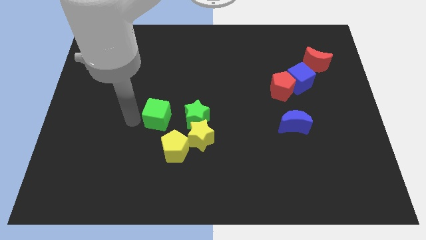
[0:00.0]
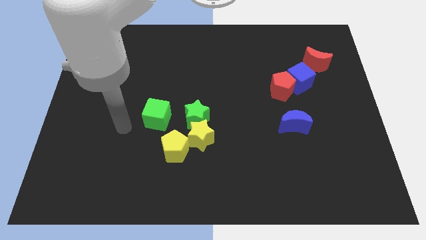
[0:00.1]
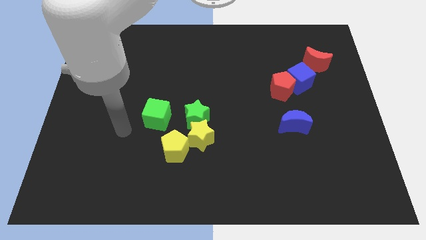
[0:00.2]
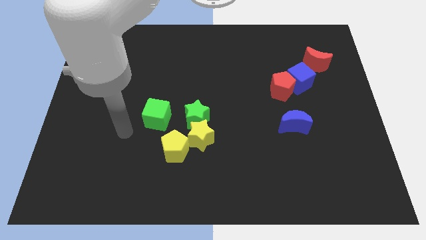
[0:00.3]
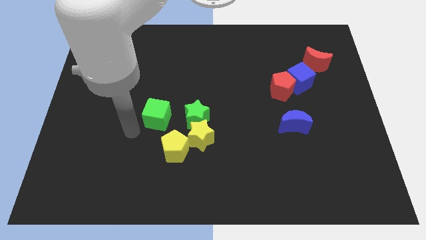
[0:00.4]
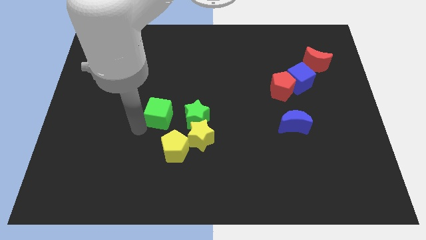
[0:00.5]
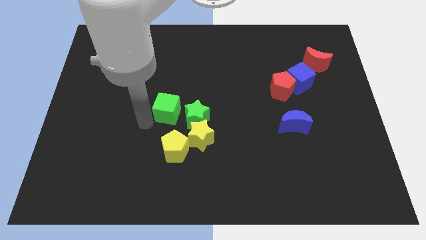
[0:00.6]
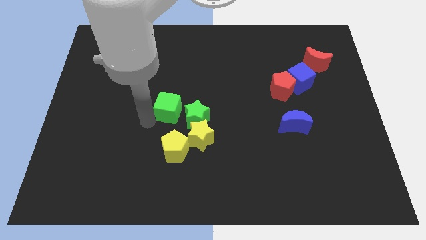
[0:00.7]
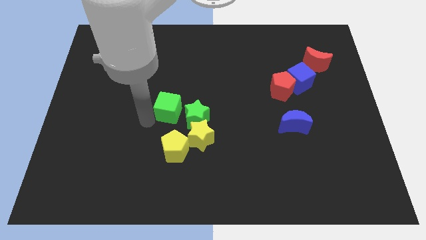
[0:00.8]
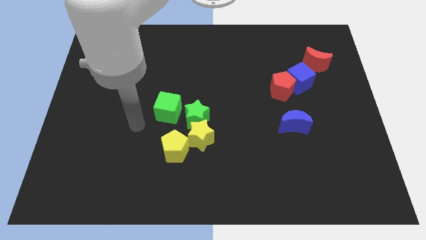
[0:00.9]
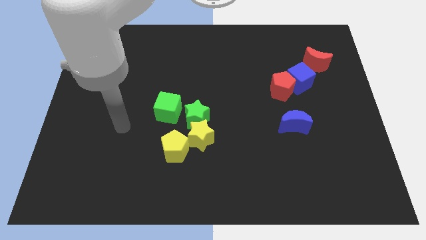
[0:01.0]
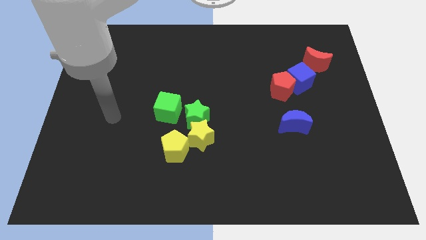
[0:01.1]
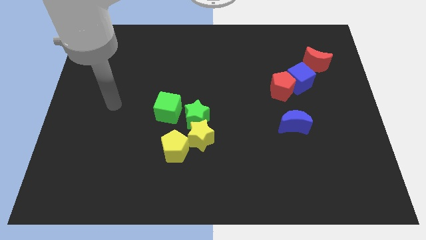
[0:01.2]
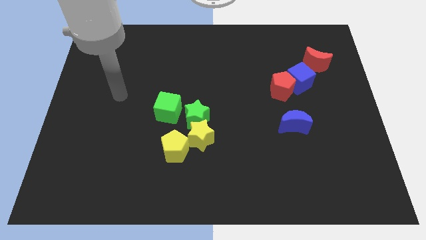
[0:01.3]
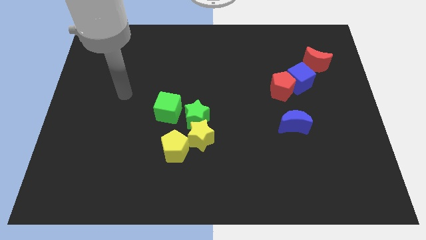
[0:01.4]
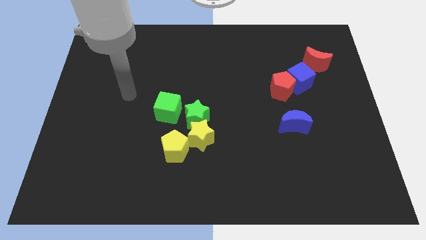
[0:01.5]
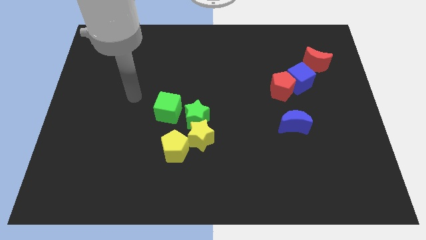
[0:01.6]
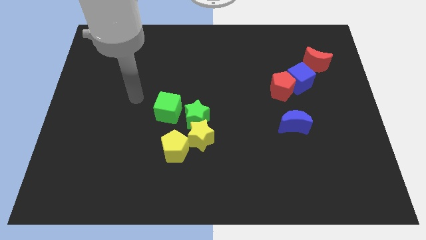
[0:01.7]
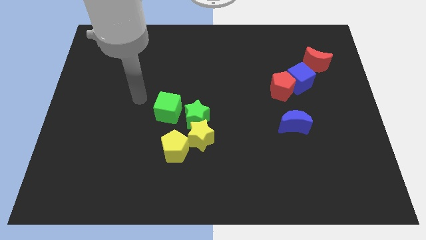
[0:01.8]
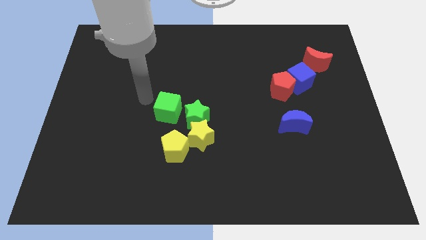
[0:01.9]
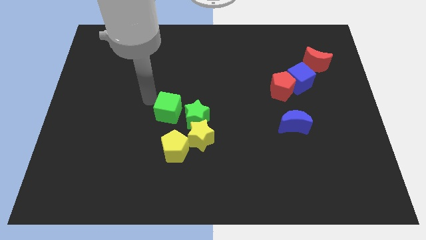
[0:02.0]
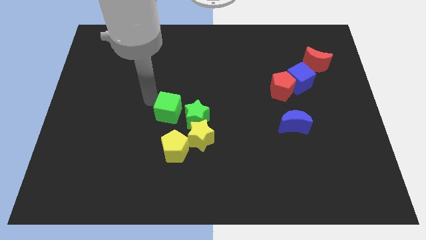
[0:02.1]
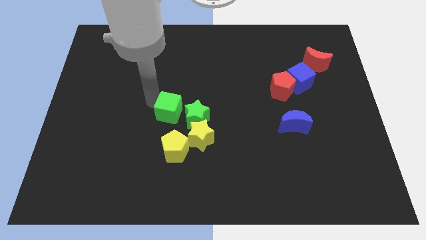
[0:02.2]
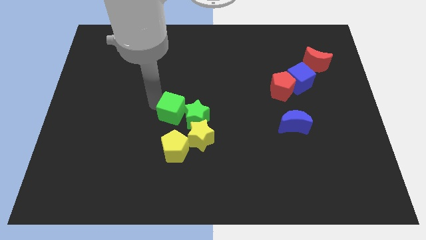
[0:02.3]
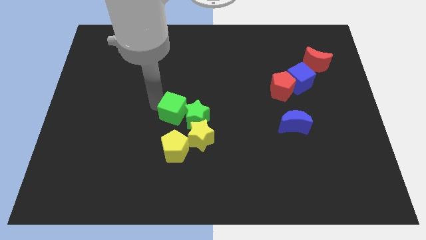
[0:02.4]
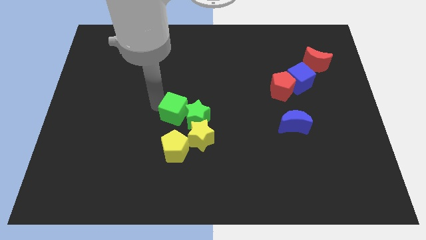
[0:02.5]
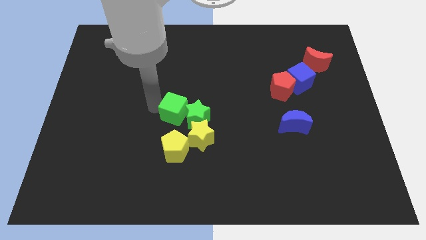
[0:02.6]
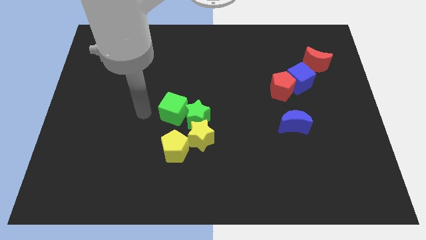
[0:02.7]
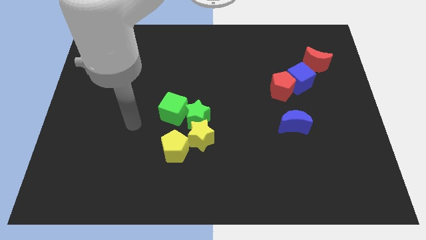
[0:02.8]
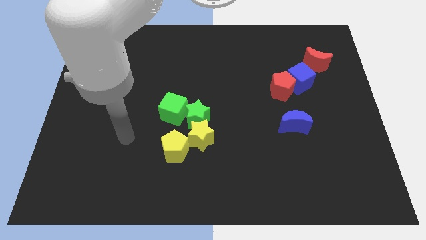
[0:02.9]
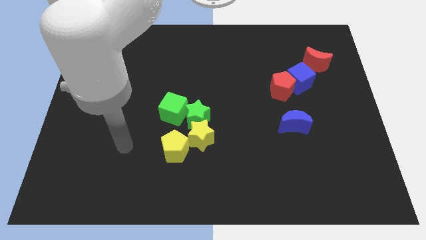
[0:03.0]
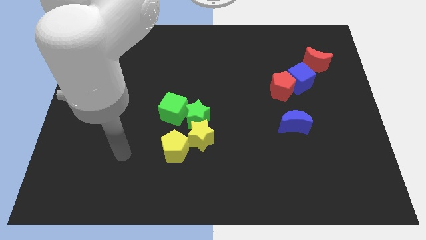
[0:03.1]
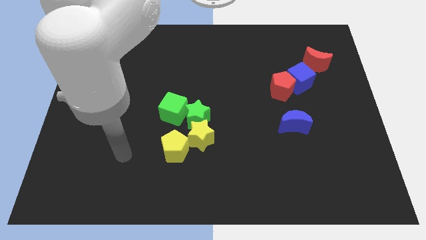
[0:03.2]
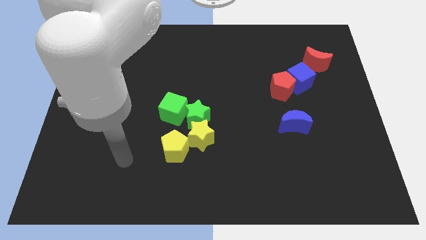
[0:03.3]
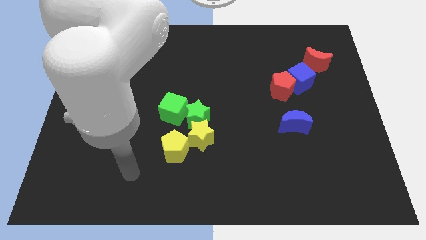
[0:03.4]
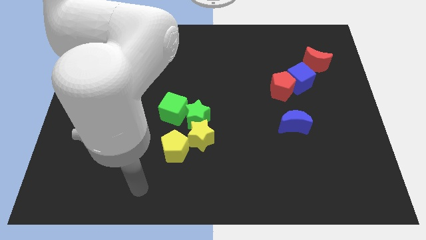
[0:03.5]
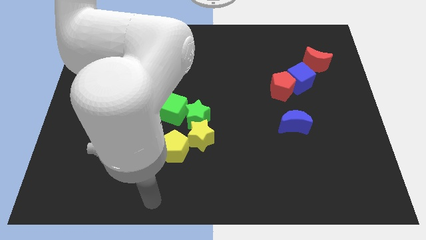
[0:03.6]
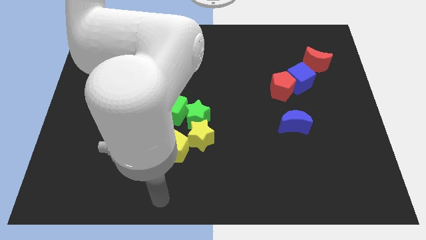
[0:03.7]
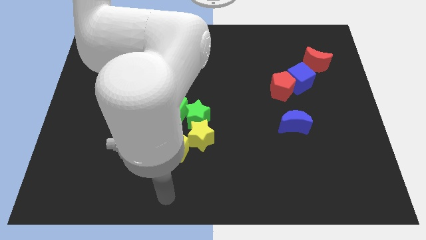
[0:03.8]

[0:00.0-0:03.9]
move the green cube to the top left side of the green star

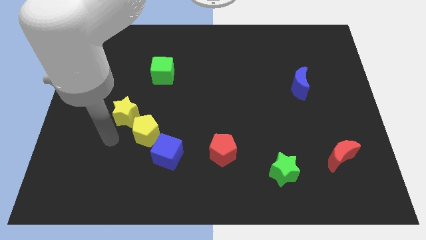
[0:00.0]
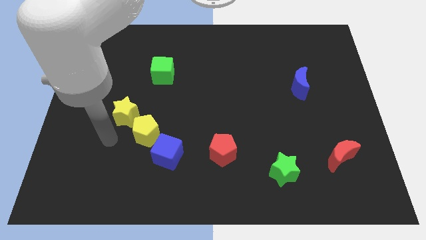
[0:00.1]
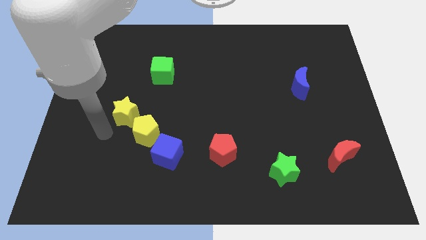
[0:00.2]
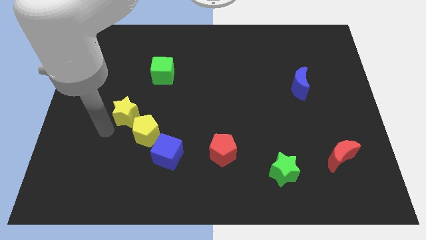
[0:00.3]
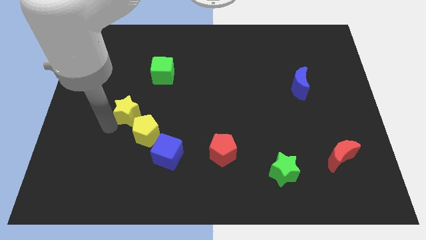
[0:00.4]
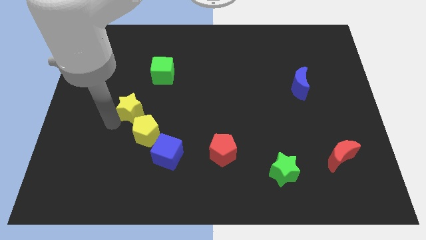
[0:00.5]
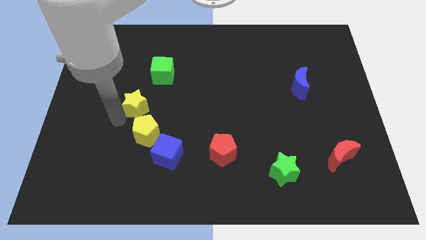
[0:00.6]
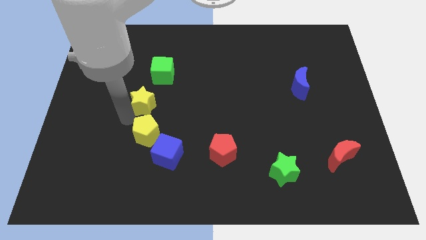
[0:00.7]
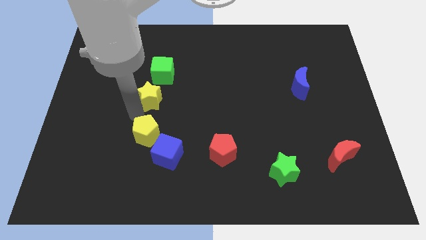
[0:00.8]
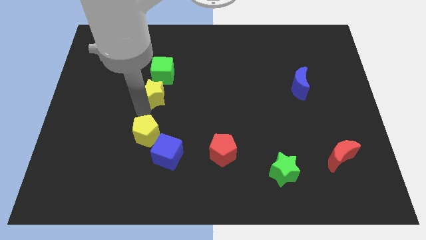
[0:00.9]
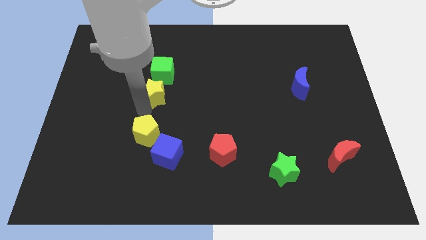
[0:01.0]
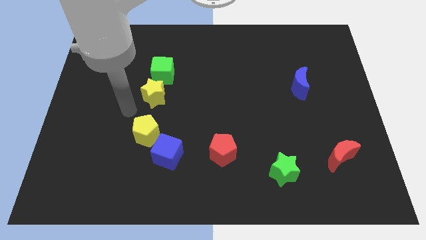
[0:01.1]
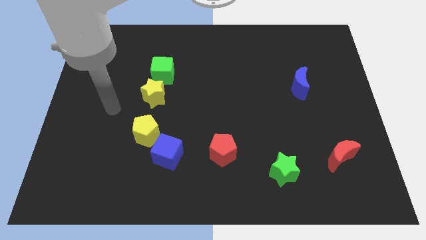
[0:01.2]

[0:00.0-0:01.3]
place the yellow star in between green cube and yellow pentagon

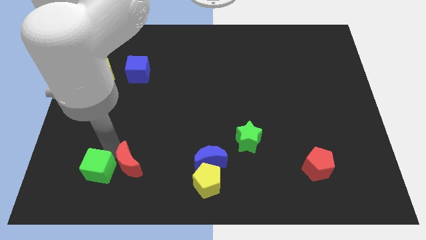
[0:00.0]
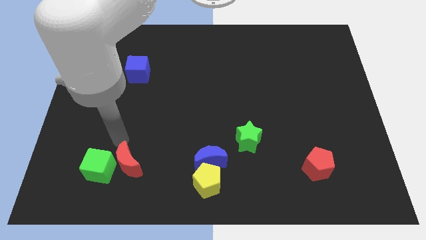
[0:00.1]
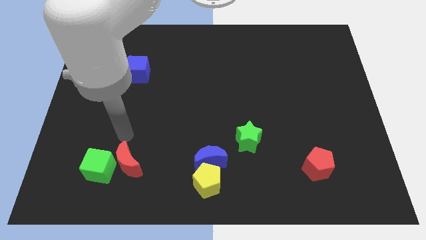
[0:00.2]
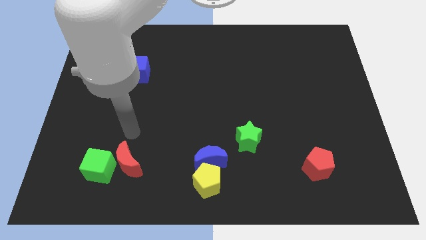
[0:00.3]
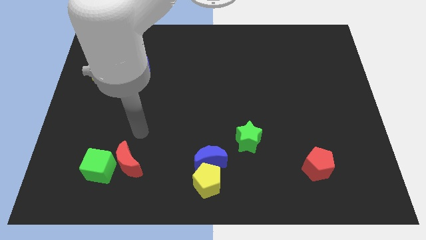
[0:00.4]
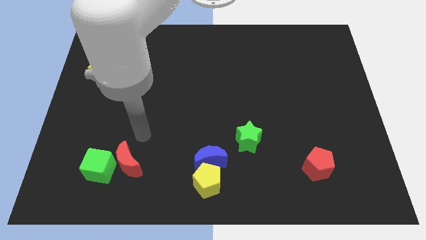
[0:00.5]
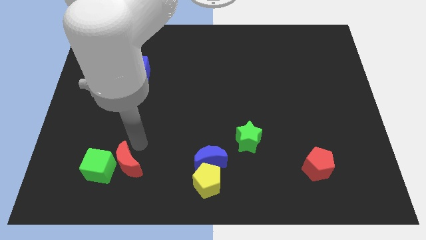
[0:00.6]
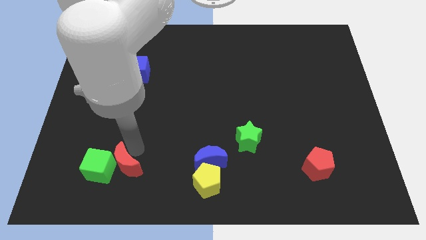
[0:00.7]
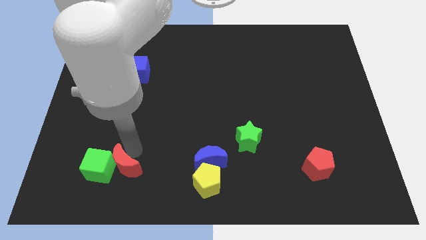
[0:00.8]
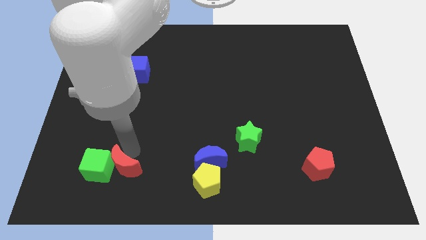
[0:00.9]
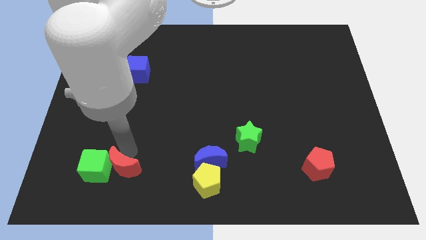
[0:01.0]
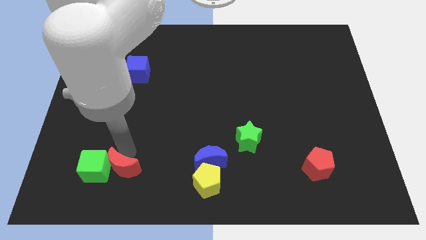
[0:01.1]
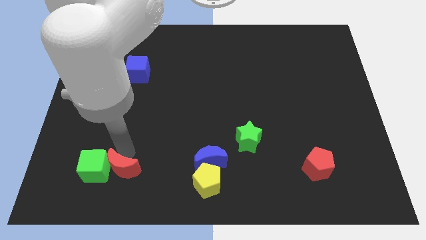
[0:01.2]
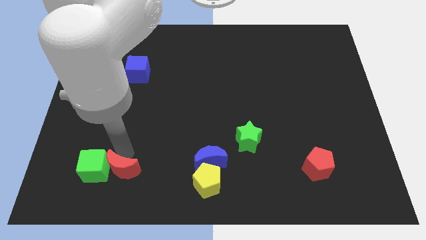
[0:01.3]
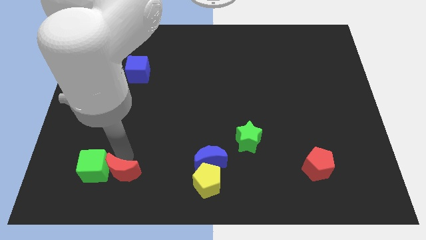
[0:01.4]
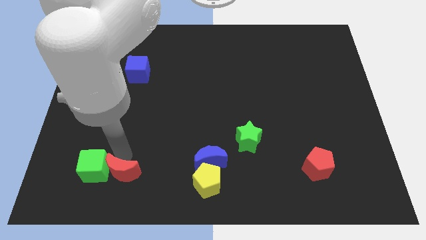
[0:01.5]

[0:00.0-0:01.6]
push the red crescent into the green cube

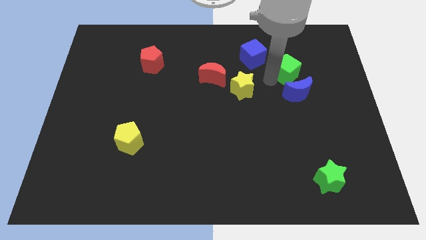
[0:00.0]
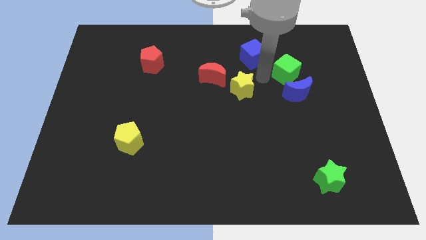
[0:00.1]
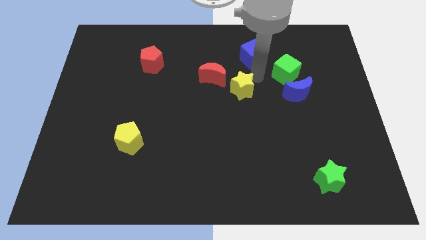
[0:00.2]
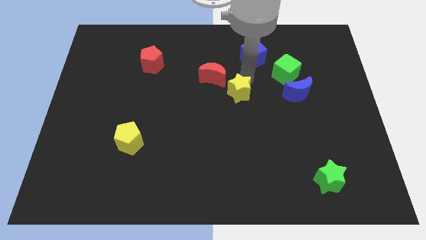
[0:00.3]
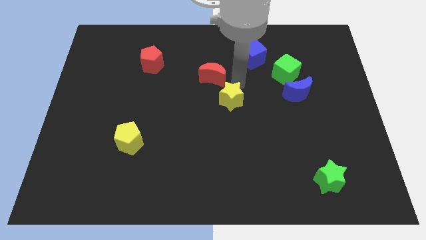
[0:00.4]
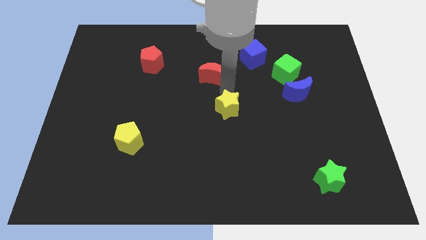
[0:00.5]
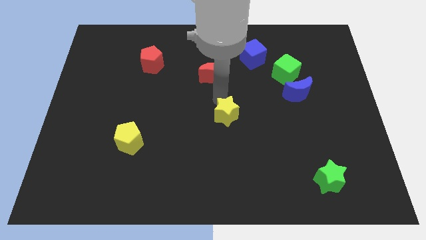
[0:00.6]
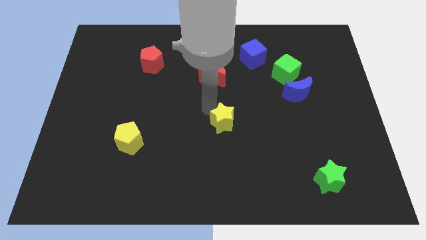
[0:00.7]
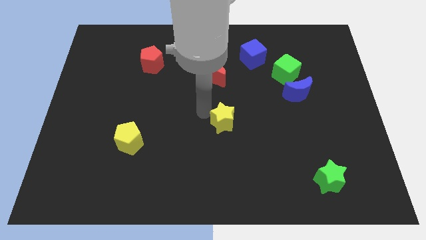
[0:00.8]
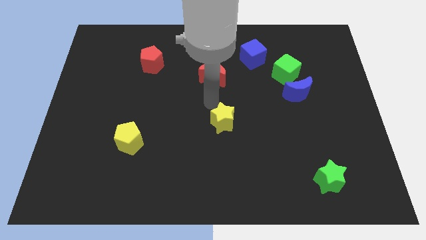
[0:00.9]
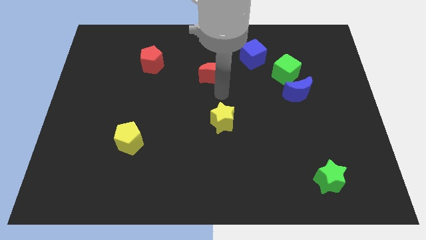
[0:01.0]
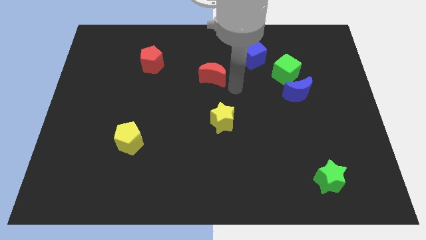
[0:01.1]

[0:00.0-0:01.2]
move the yellow star to the center of the board

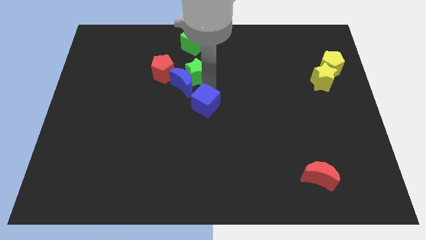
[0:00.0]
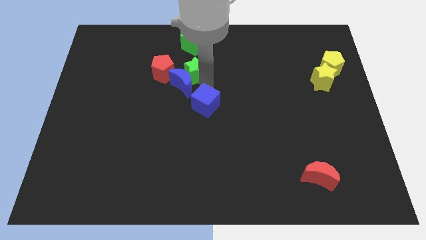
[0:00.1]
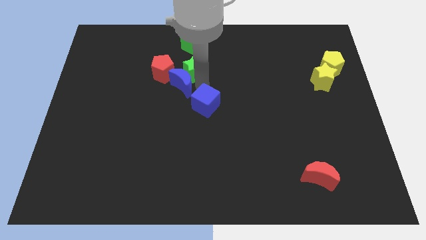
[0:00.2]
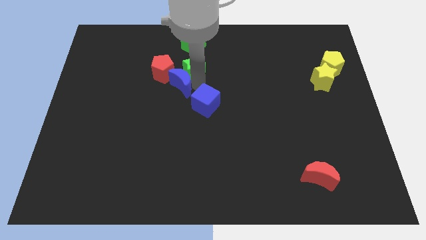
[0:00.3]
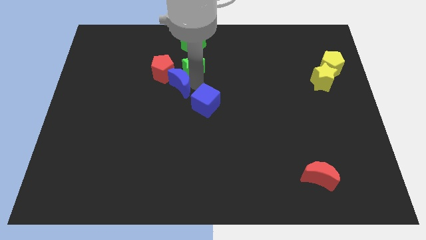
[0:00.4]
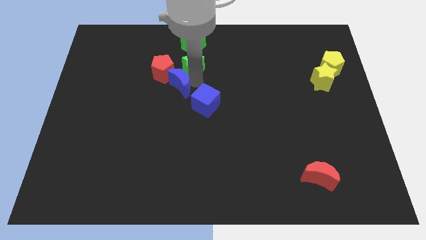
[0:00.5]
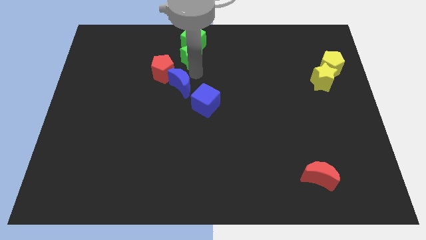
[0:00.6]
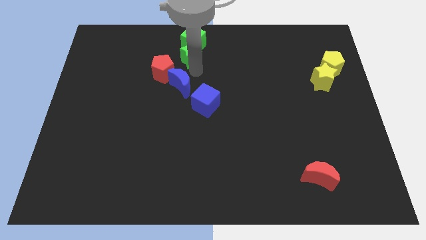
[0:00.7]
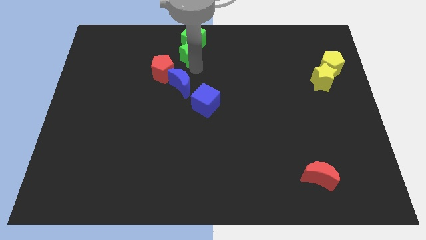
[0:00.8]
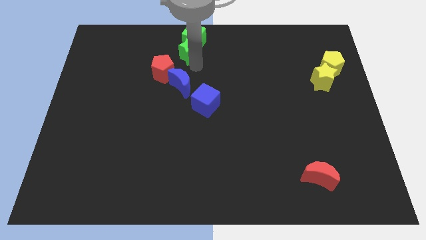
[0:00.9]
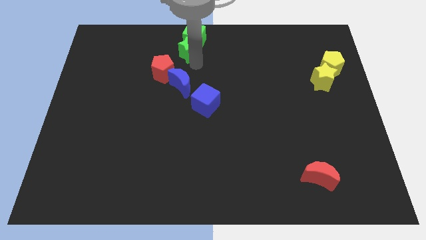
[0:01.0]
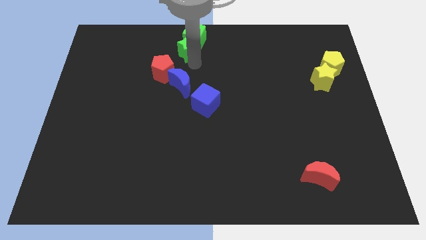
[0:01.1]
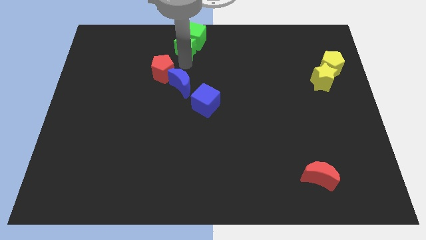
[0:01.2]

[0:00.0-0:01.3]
move the green star into the green cube
